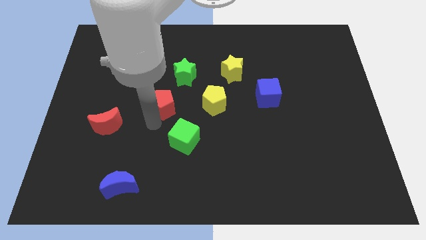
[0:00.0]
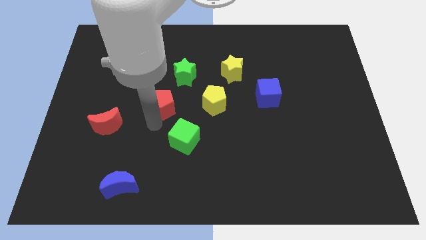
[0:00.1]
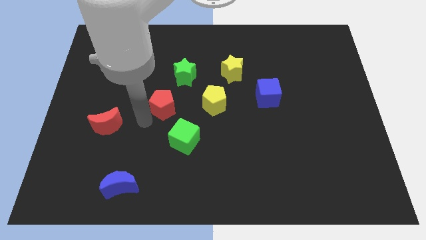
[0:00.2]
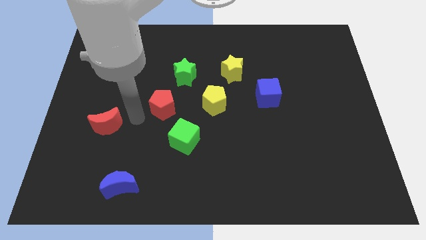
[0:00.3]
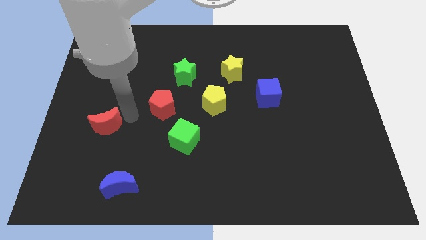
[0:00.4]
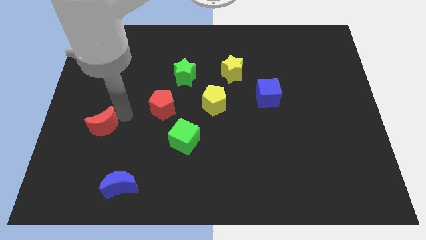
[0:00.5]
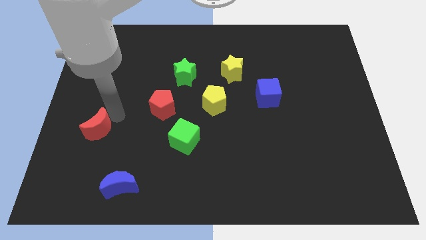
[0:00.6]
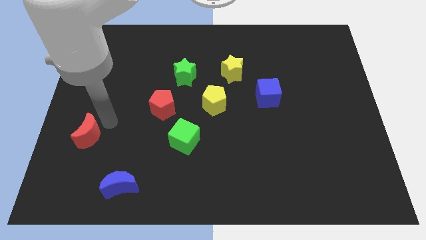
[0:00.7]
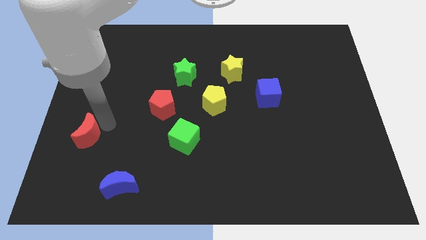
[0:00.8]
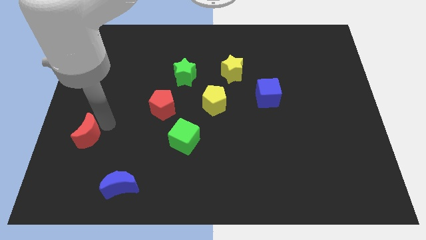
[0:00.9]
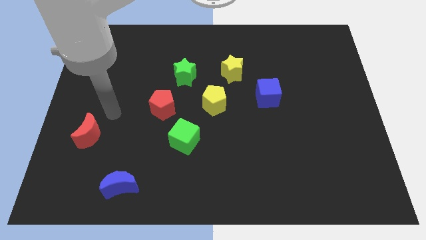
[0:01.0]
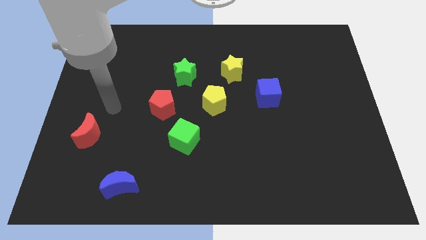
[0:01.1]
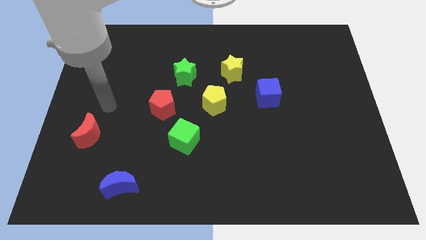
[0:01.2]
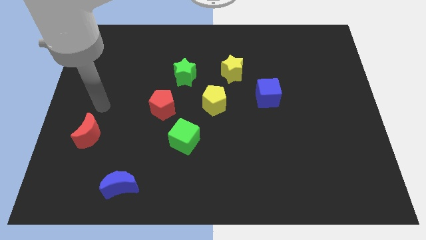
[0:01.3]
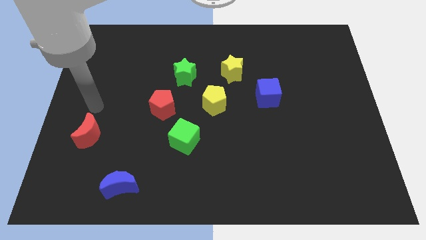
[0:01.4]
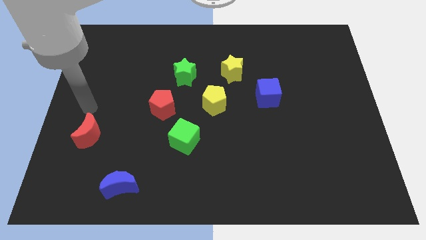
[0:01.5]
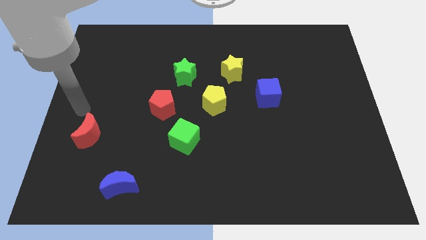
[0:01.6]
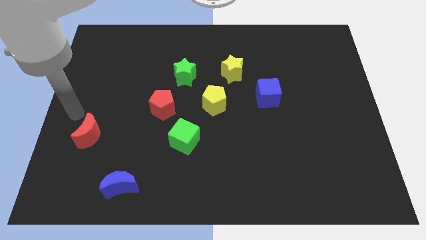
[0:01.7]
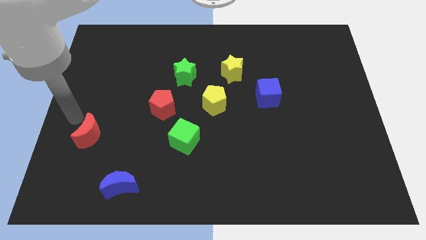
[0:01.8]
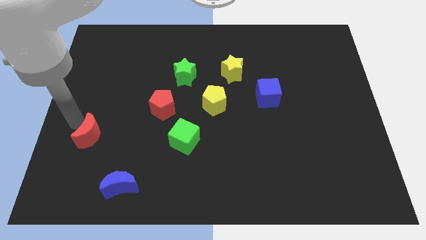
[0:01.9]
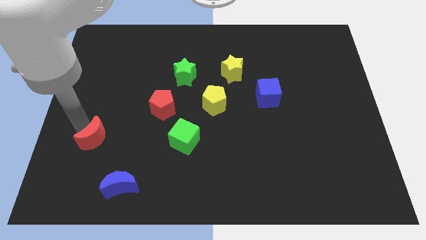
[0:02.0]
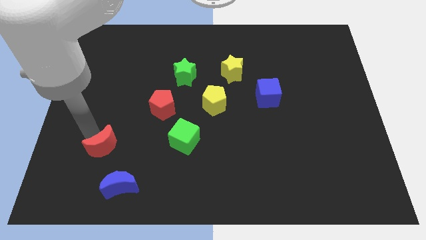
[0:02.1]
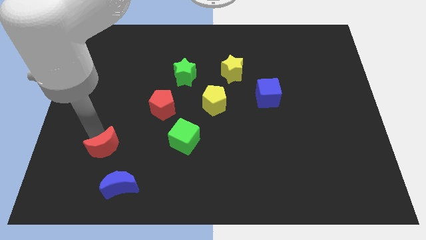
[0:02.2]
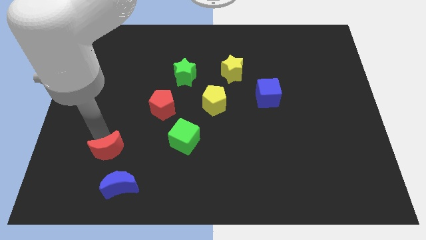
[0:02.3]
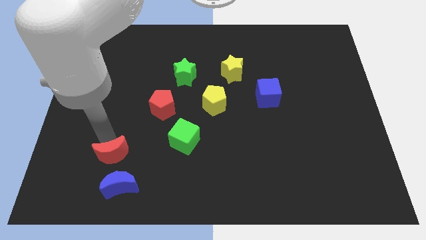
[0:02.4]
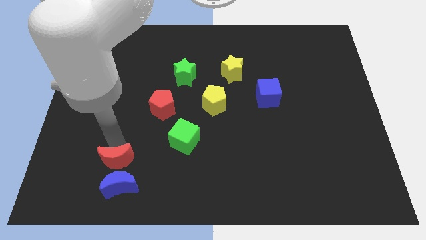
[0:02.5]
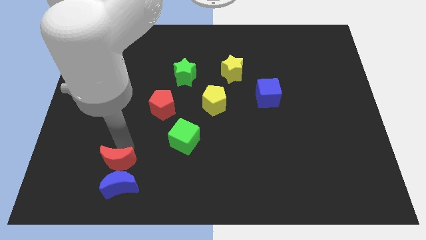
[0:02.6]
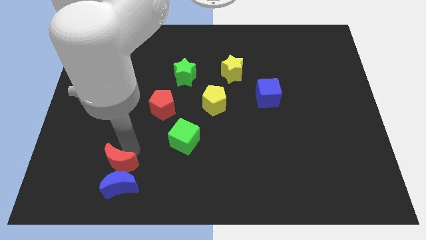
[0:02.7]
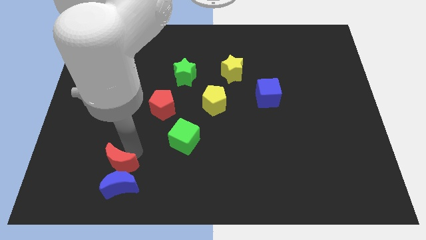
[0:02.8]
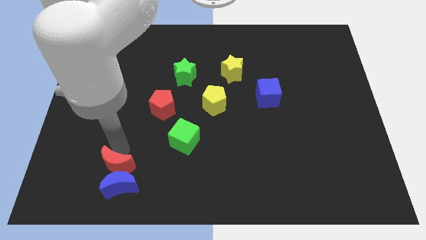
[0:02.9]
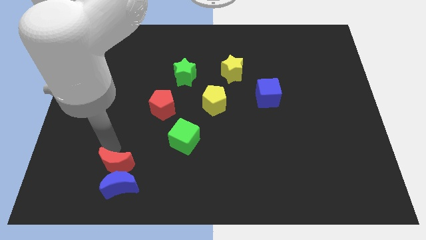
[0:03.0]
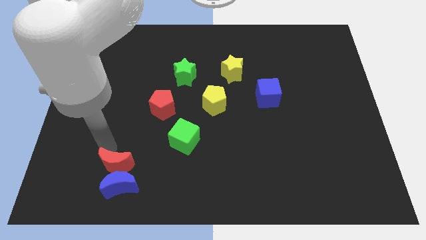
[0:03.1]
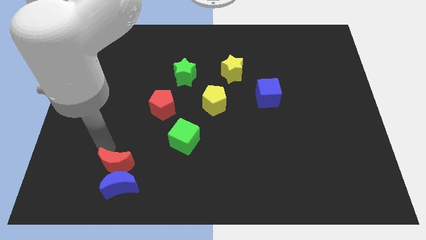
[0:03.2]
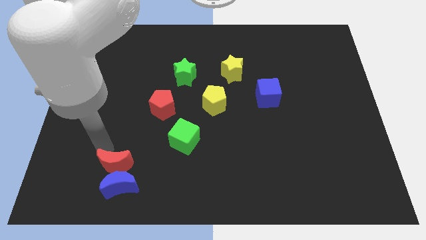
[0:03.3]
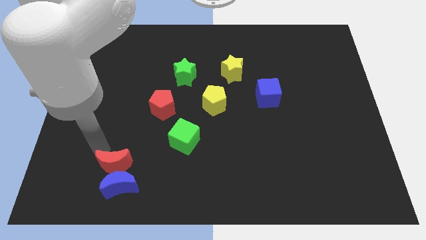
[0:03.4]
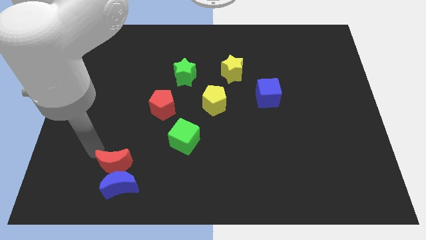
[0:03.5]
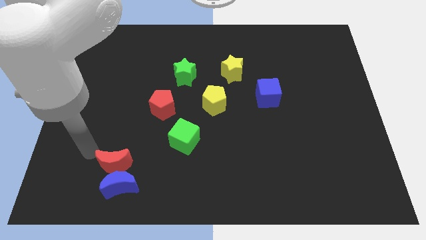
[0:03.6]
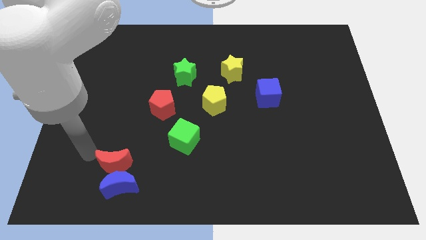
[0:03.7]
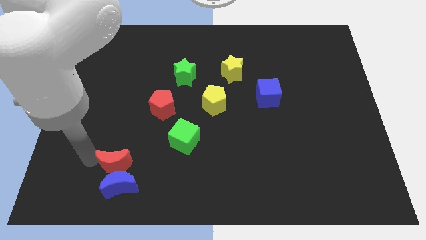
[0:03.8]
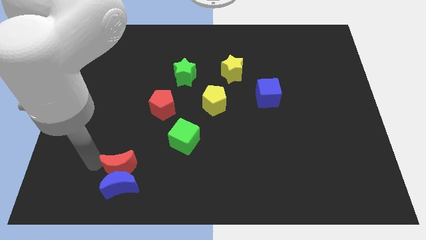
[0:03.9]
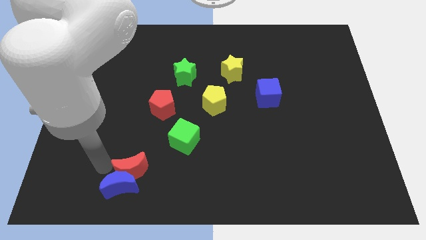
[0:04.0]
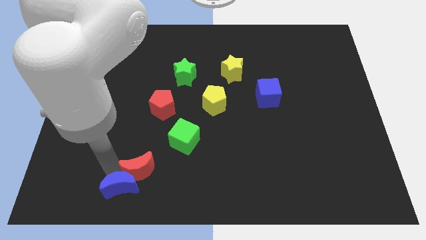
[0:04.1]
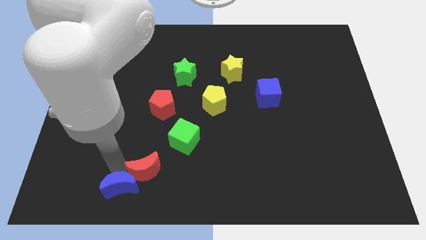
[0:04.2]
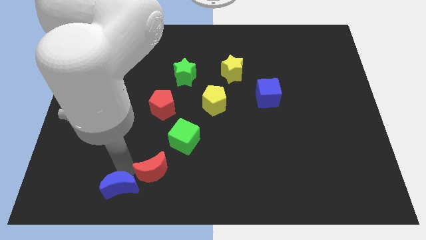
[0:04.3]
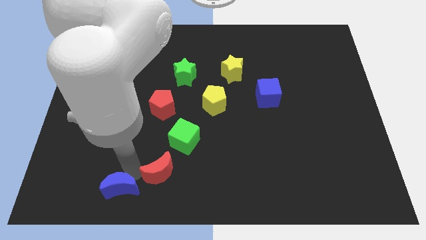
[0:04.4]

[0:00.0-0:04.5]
push the red moon into the blue moon

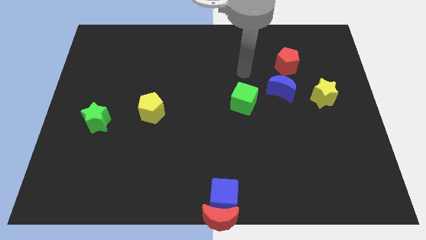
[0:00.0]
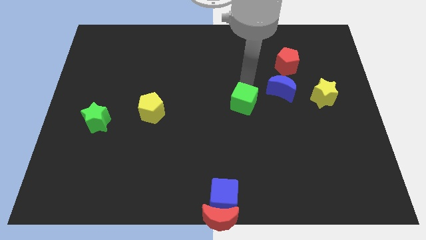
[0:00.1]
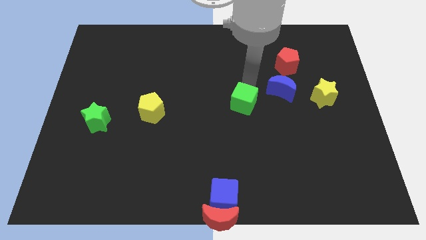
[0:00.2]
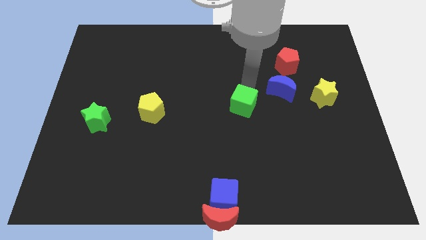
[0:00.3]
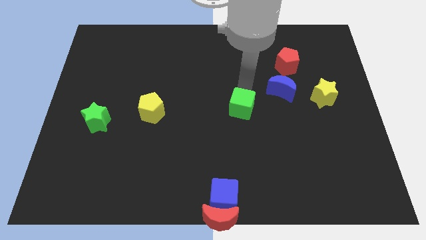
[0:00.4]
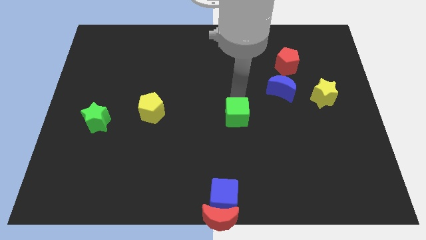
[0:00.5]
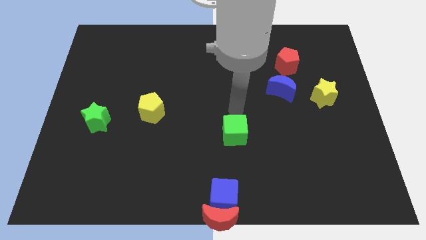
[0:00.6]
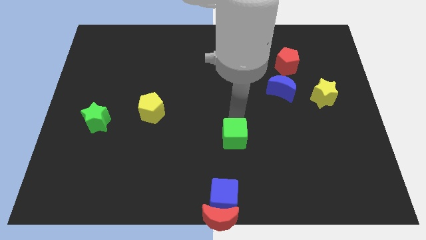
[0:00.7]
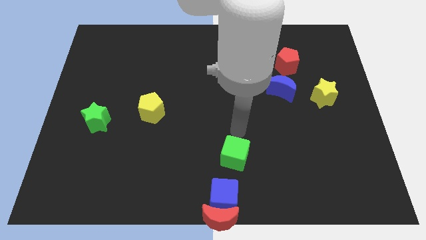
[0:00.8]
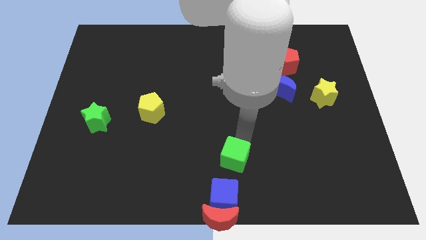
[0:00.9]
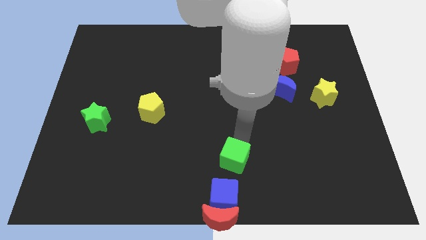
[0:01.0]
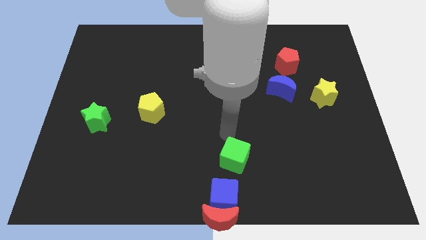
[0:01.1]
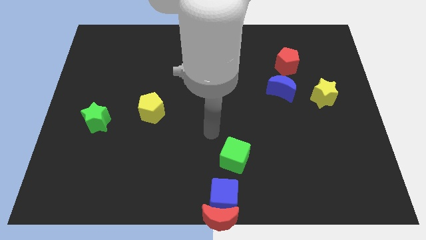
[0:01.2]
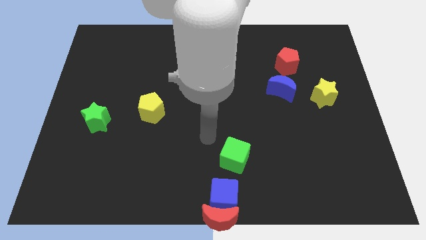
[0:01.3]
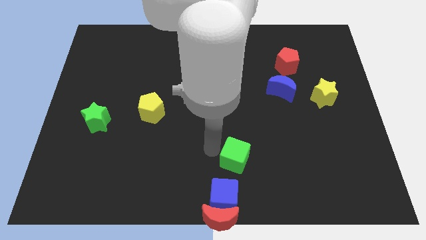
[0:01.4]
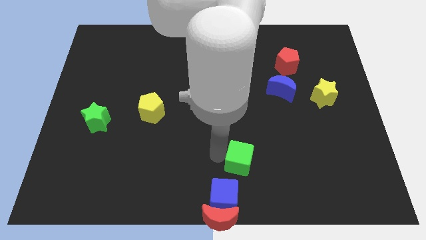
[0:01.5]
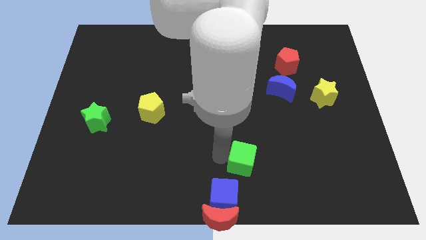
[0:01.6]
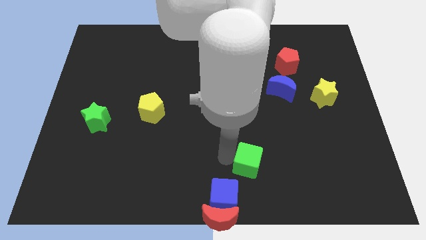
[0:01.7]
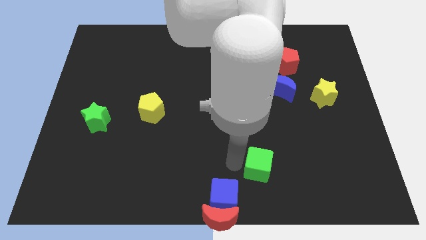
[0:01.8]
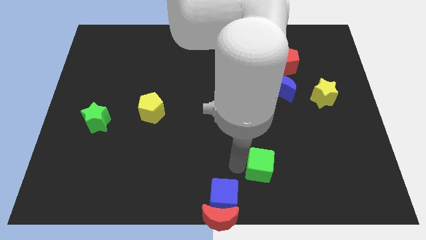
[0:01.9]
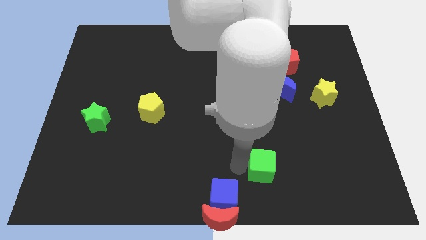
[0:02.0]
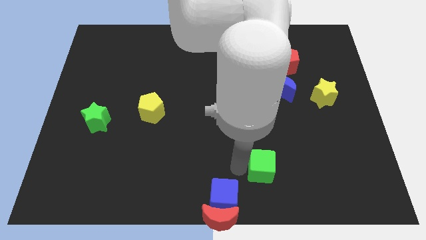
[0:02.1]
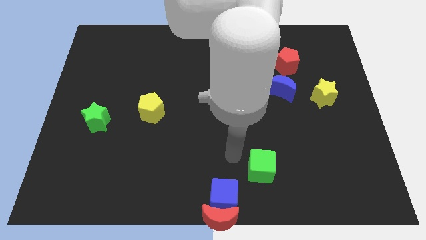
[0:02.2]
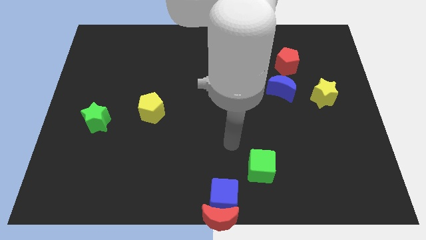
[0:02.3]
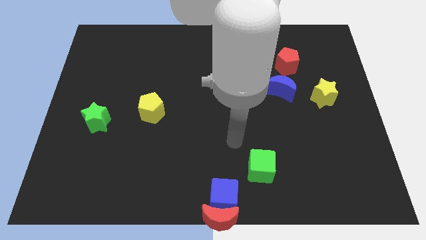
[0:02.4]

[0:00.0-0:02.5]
move the green cube diagonally to the top right of the blue cube

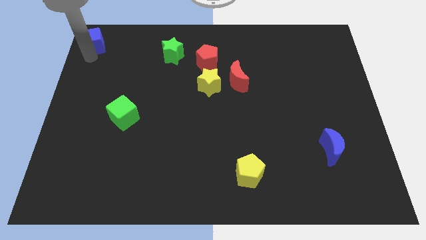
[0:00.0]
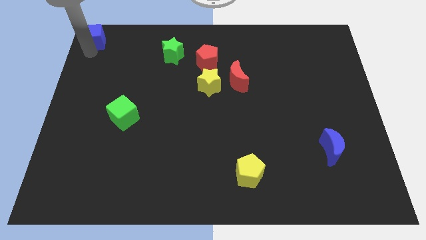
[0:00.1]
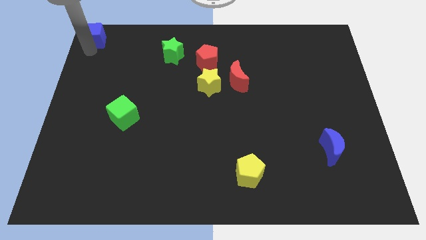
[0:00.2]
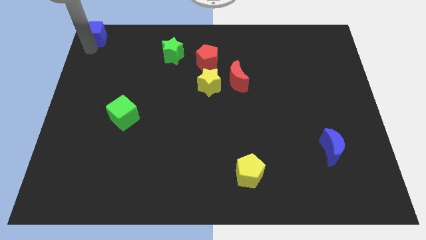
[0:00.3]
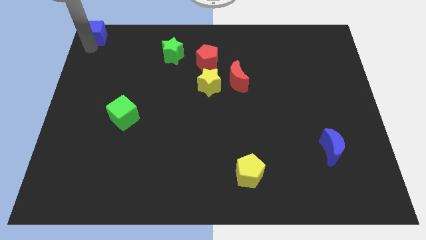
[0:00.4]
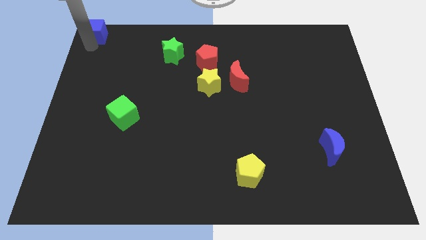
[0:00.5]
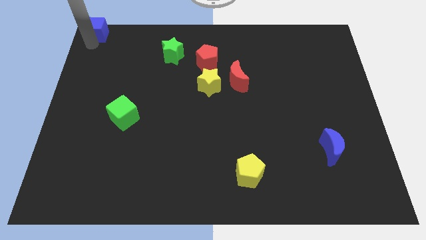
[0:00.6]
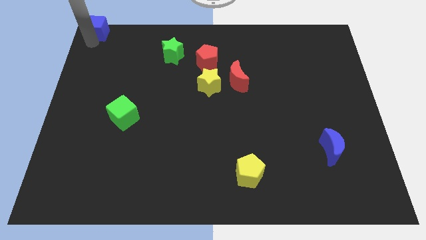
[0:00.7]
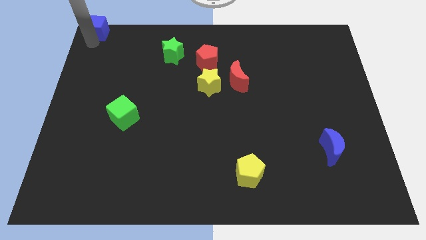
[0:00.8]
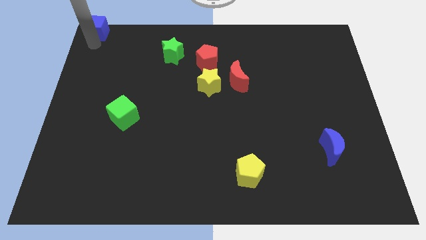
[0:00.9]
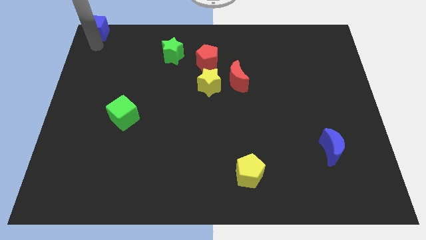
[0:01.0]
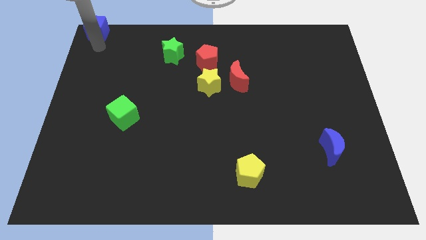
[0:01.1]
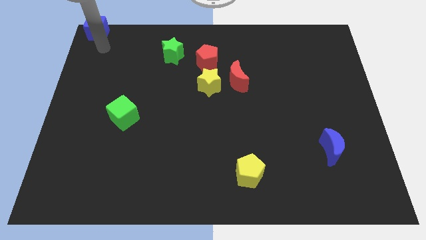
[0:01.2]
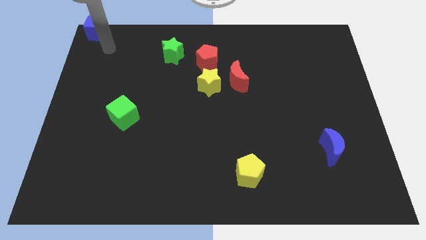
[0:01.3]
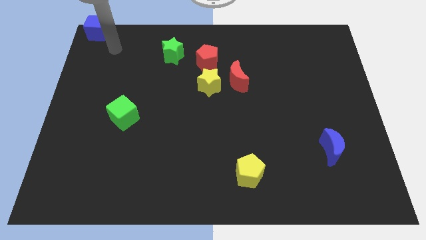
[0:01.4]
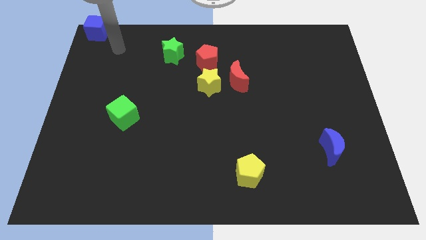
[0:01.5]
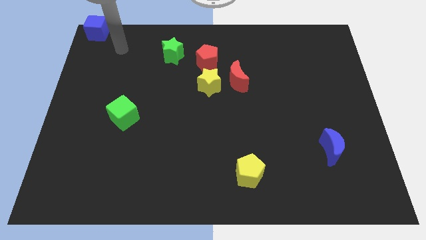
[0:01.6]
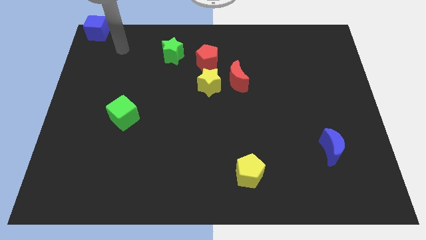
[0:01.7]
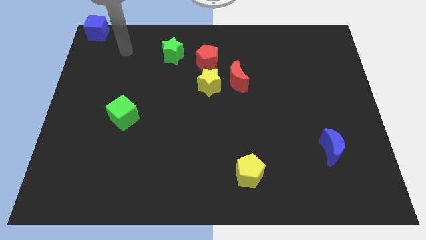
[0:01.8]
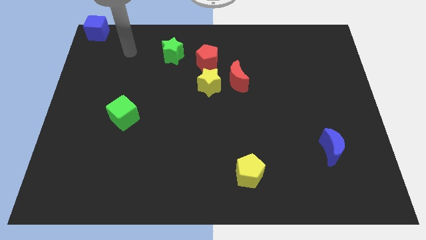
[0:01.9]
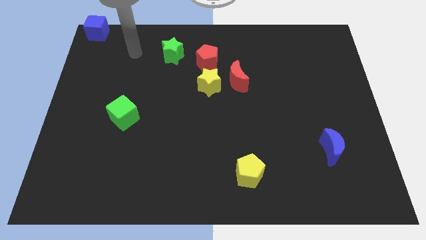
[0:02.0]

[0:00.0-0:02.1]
put the blue cube to the top left
